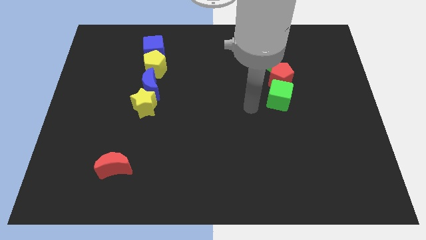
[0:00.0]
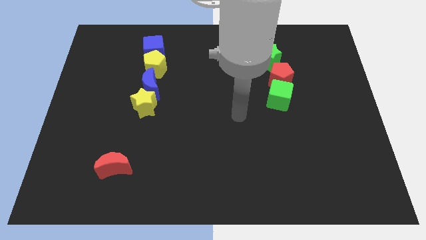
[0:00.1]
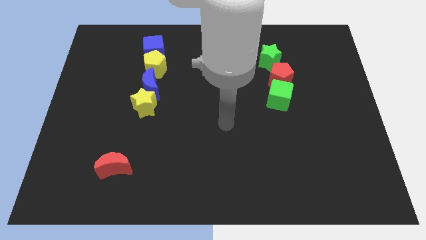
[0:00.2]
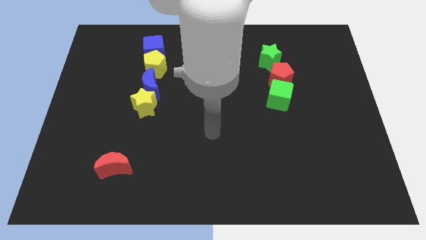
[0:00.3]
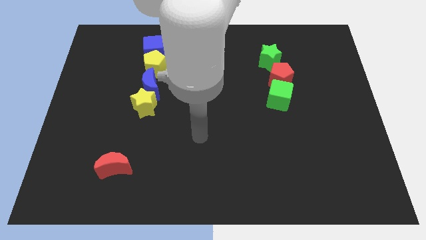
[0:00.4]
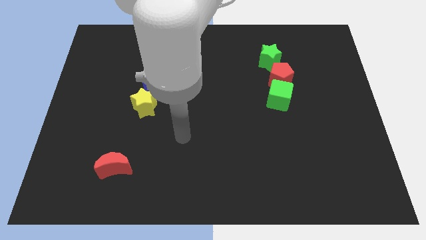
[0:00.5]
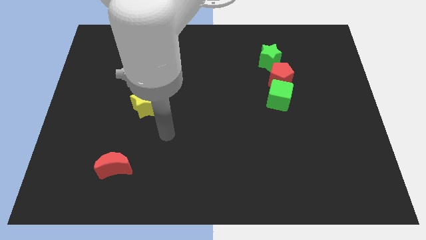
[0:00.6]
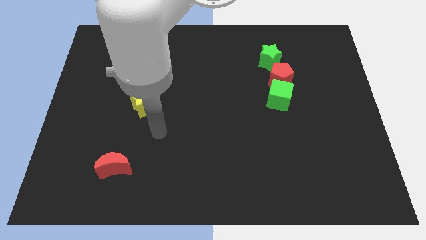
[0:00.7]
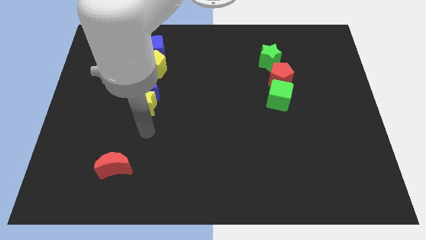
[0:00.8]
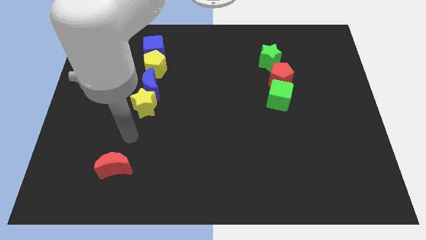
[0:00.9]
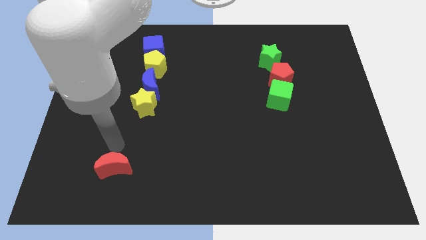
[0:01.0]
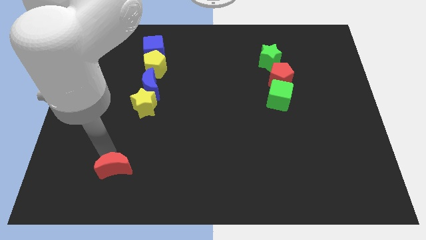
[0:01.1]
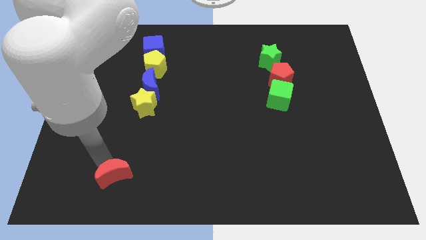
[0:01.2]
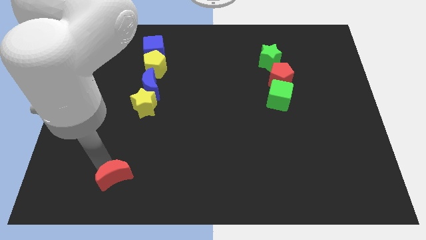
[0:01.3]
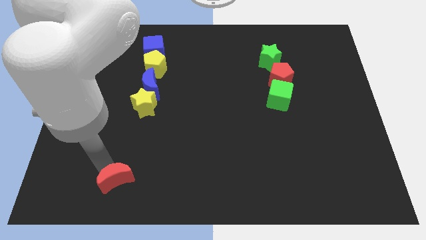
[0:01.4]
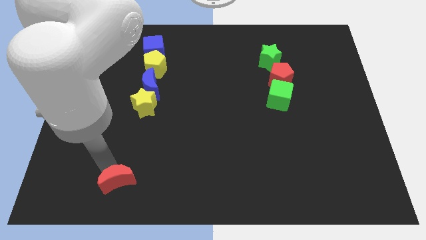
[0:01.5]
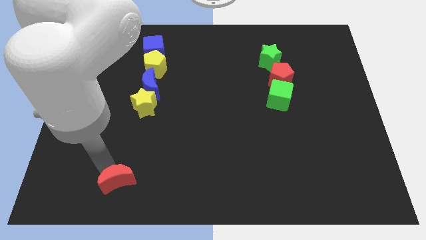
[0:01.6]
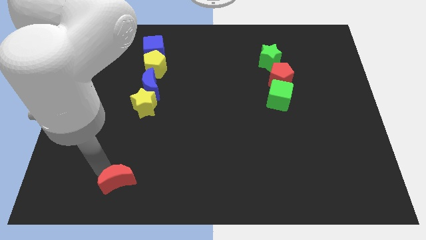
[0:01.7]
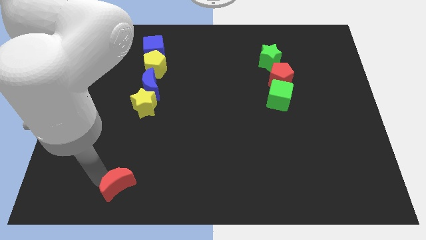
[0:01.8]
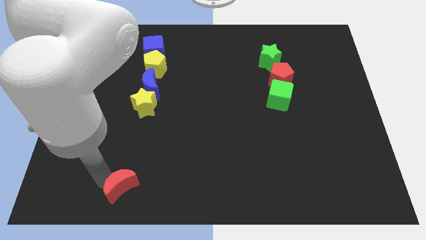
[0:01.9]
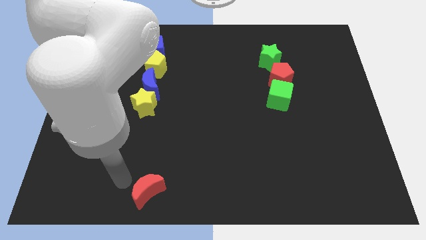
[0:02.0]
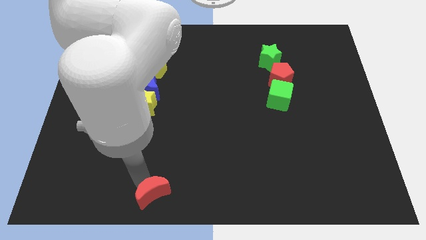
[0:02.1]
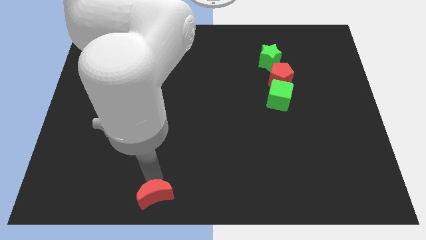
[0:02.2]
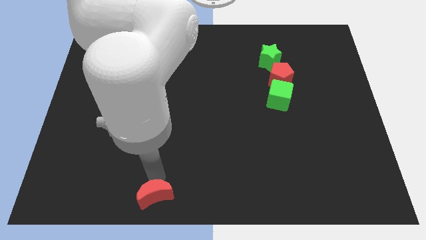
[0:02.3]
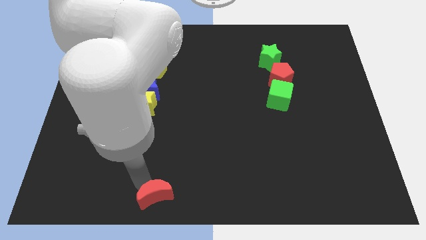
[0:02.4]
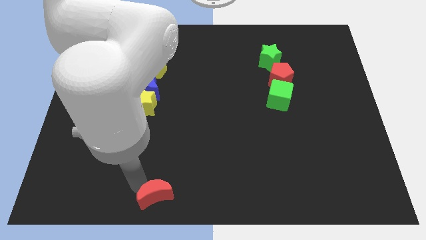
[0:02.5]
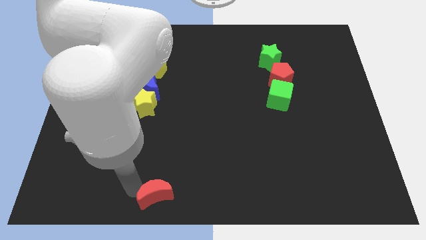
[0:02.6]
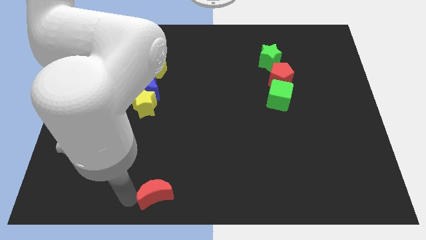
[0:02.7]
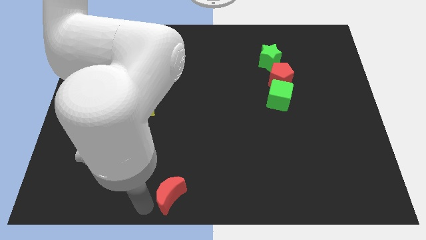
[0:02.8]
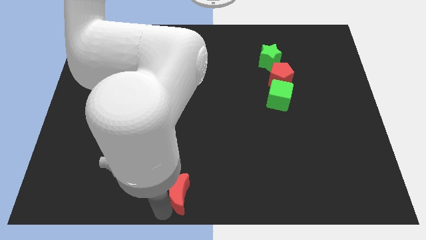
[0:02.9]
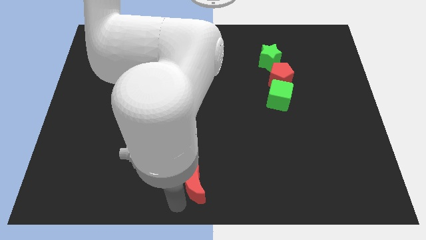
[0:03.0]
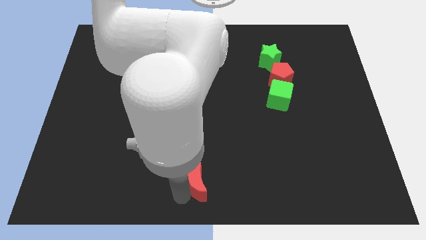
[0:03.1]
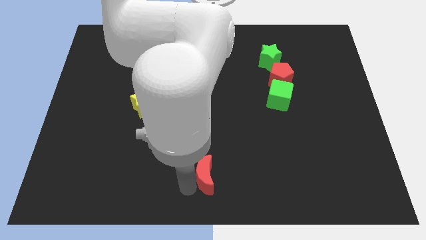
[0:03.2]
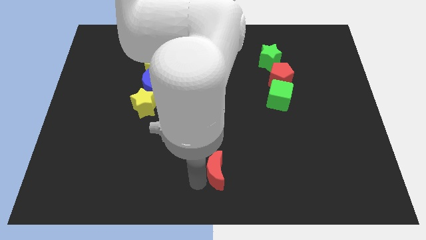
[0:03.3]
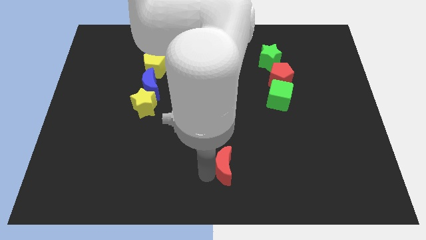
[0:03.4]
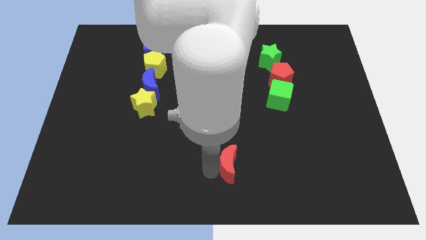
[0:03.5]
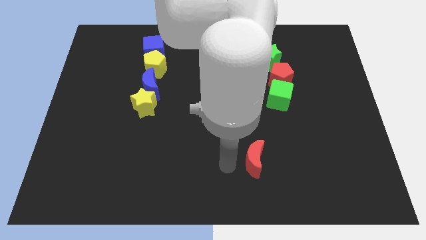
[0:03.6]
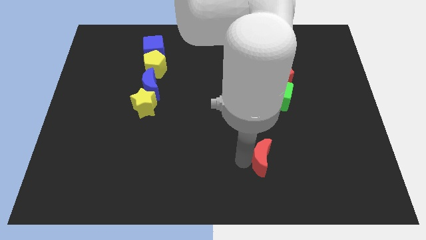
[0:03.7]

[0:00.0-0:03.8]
push the red crescent to the right

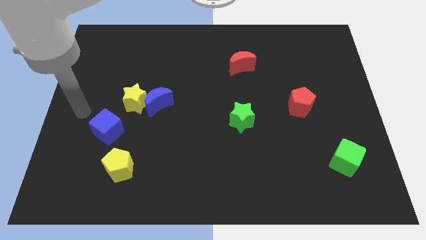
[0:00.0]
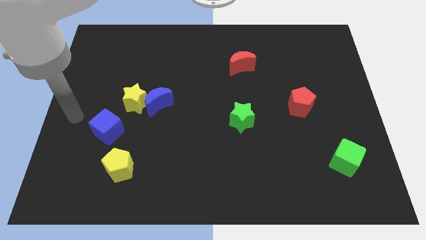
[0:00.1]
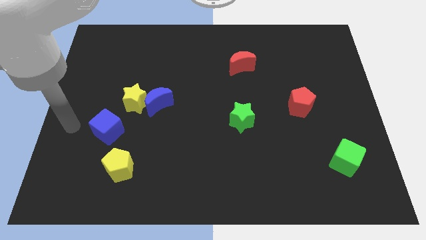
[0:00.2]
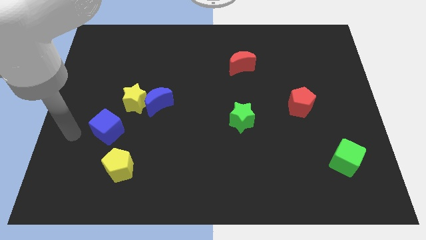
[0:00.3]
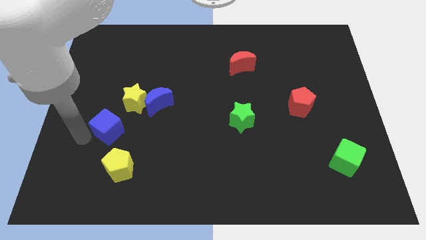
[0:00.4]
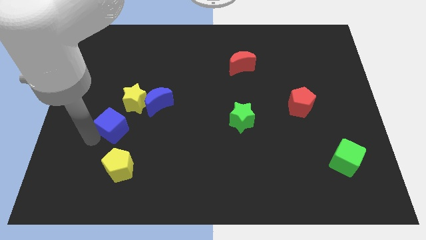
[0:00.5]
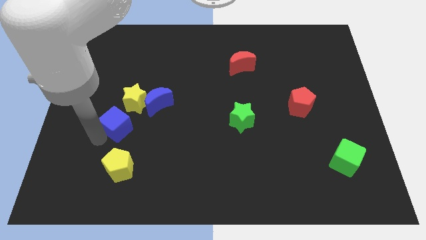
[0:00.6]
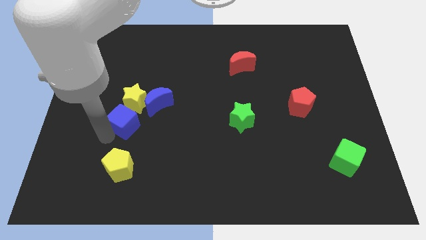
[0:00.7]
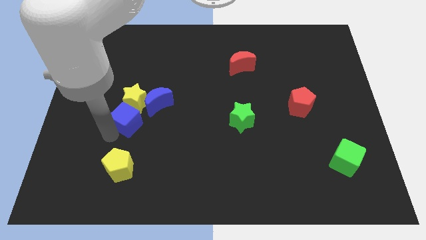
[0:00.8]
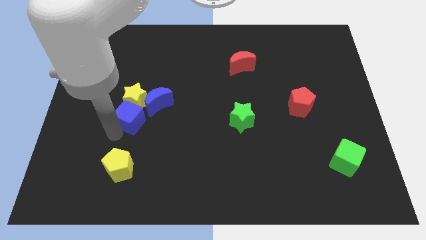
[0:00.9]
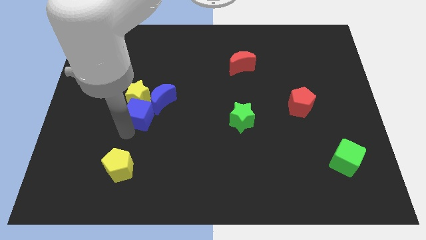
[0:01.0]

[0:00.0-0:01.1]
place blue cube to the bottom of yellow star

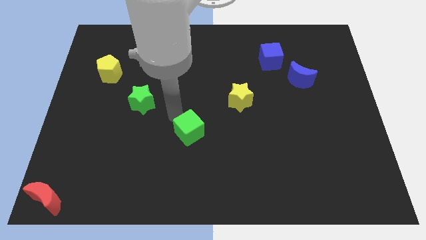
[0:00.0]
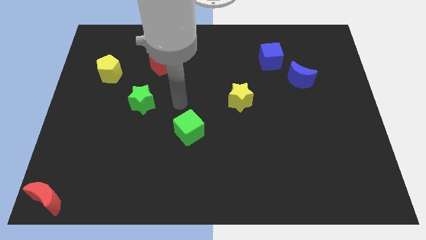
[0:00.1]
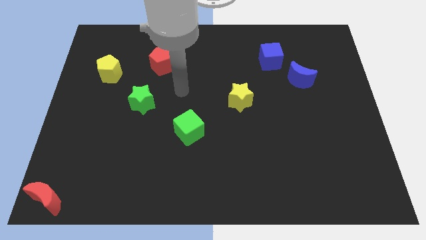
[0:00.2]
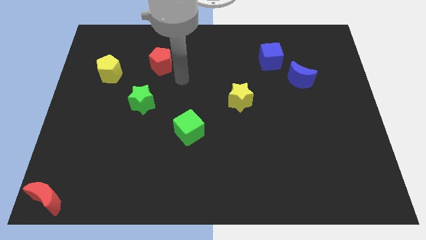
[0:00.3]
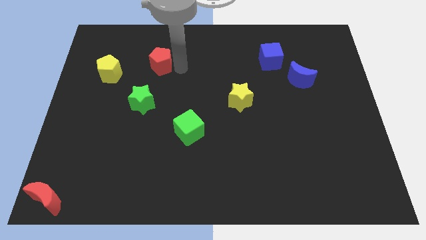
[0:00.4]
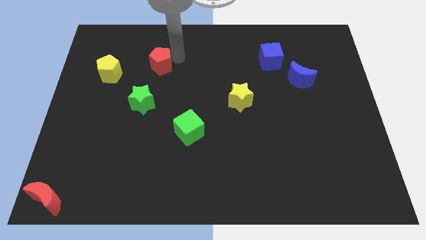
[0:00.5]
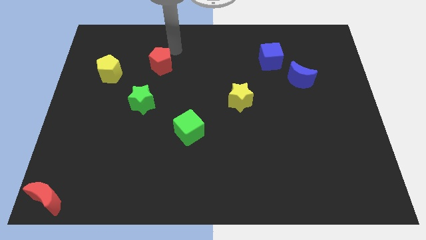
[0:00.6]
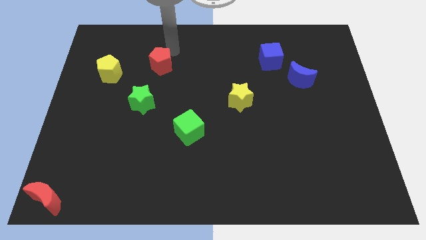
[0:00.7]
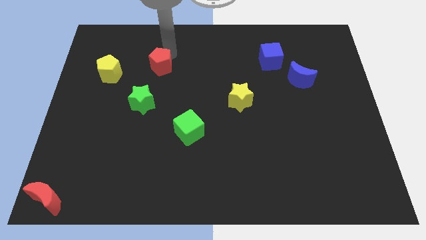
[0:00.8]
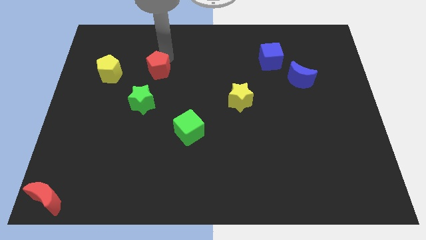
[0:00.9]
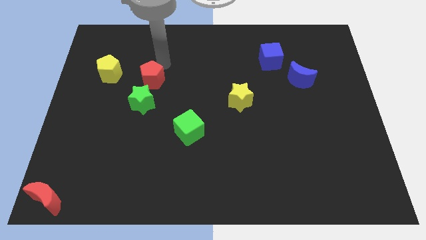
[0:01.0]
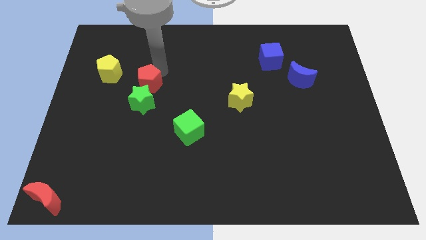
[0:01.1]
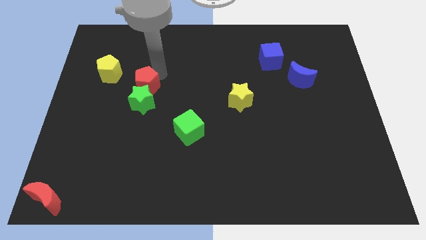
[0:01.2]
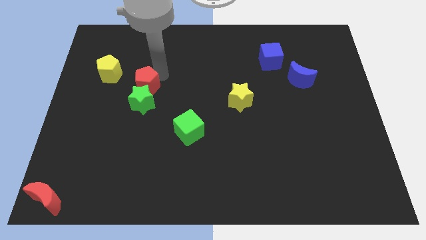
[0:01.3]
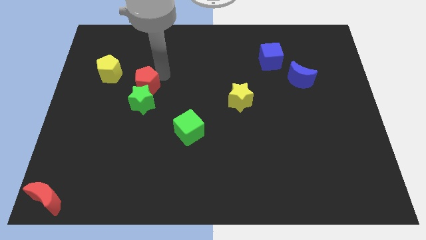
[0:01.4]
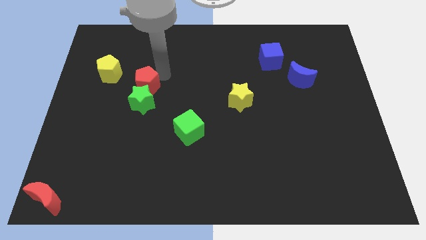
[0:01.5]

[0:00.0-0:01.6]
move the red pentagon above the green star

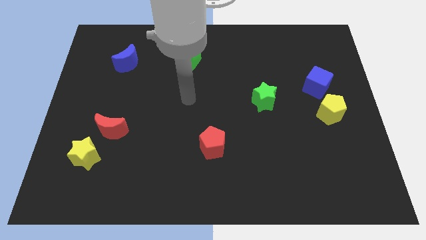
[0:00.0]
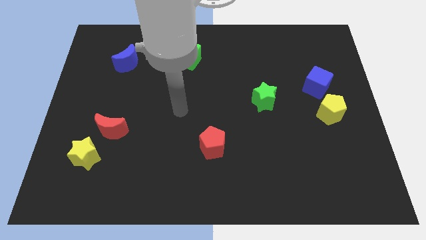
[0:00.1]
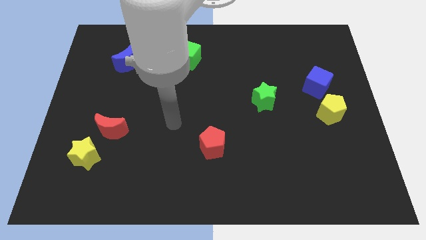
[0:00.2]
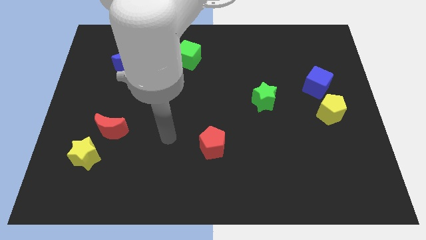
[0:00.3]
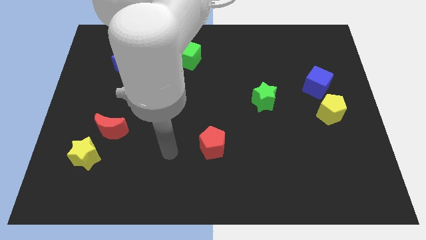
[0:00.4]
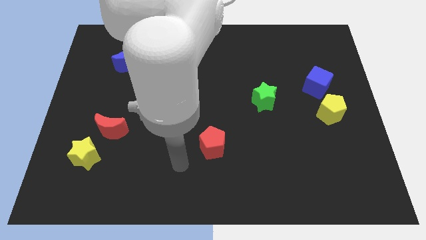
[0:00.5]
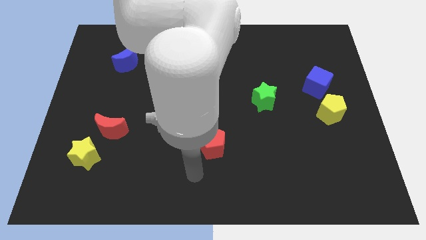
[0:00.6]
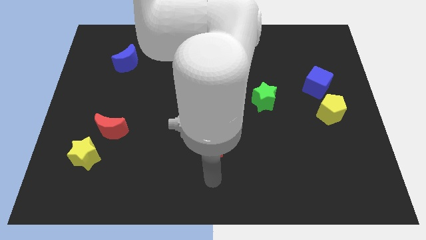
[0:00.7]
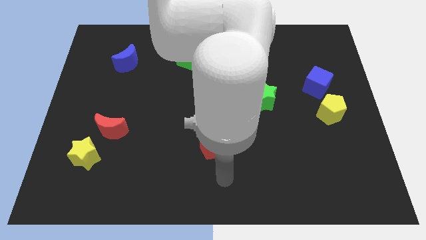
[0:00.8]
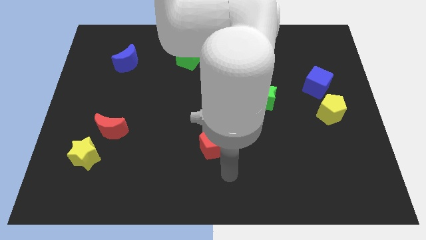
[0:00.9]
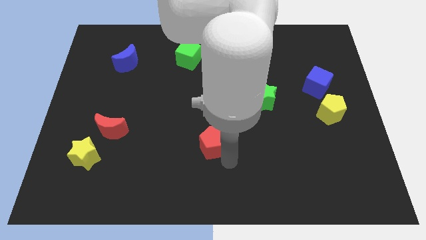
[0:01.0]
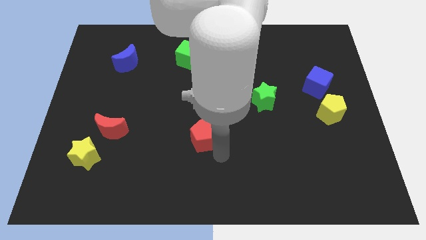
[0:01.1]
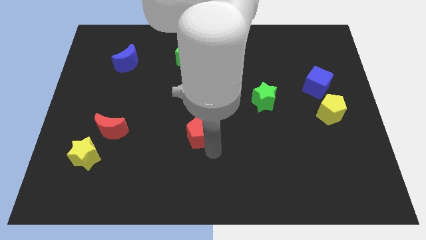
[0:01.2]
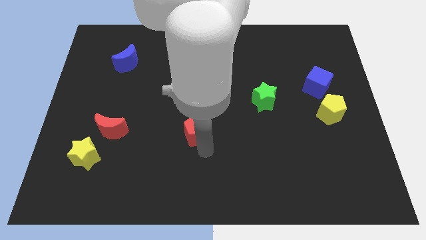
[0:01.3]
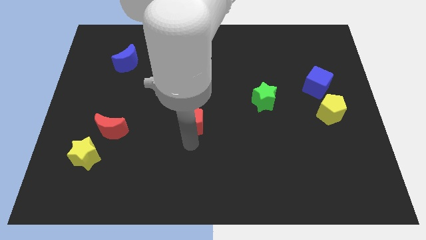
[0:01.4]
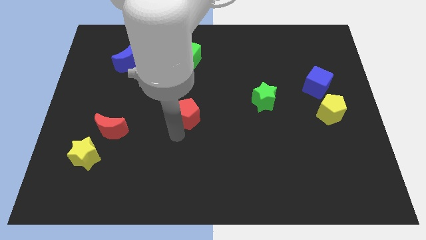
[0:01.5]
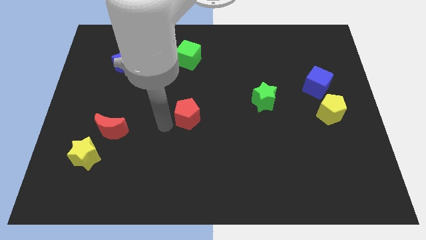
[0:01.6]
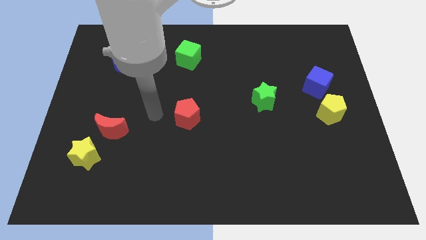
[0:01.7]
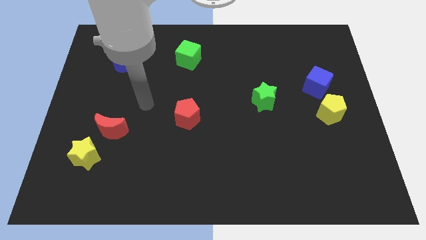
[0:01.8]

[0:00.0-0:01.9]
push the red pentagon towards the top side of the board

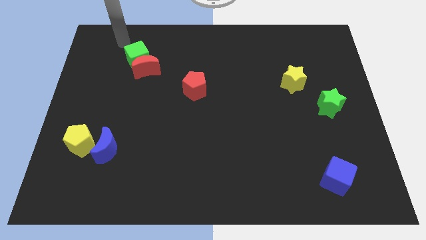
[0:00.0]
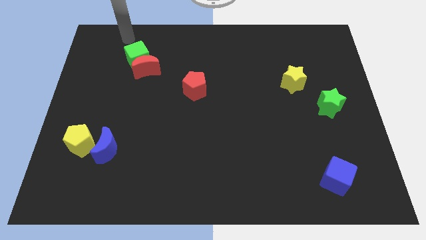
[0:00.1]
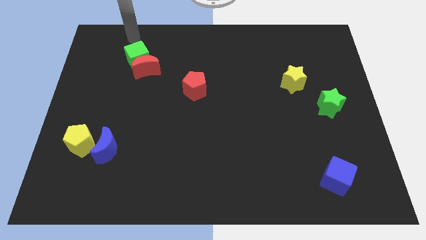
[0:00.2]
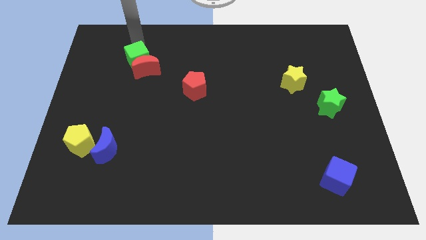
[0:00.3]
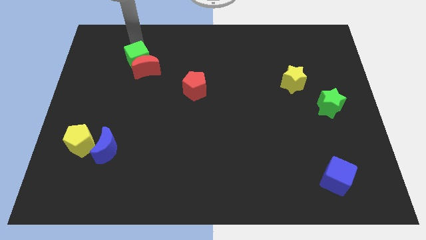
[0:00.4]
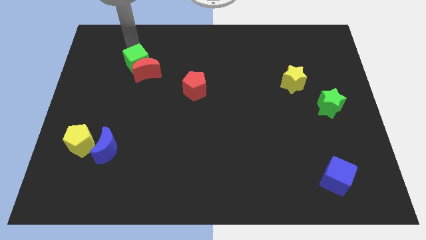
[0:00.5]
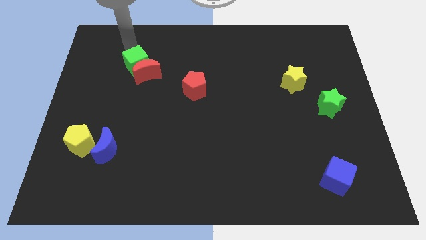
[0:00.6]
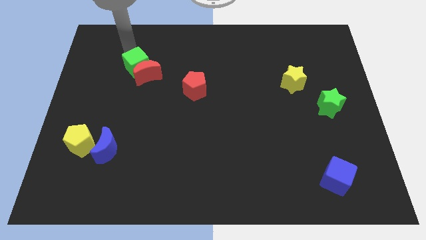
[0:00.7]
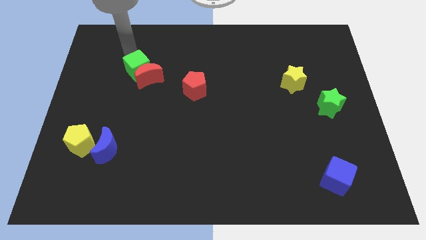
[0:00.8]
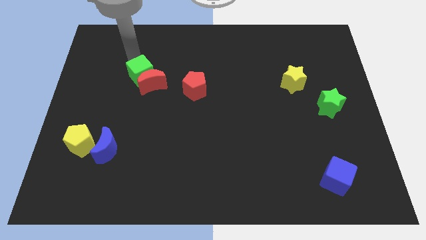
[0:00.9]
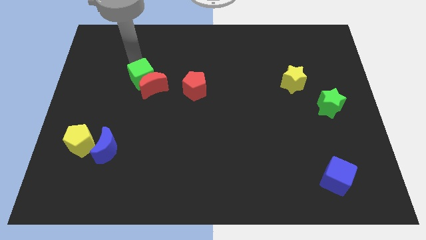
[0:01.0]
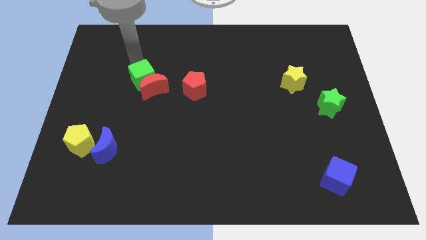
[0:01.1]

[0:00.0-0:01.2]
move green cube and red moon slightly down
